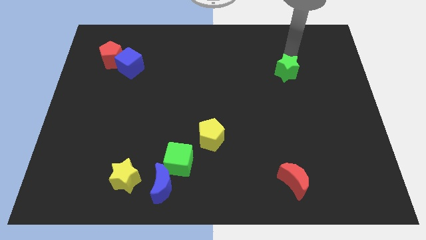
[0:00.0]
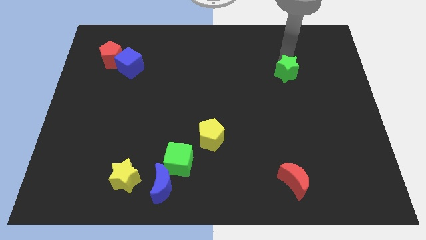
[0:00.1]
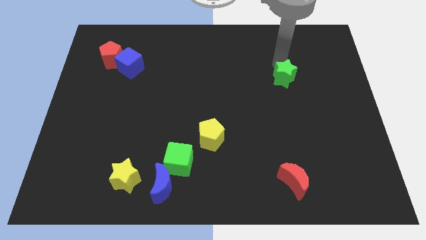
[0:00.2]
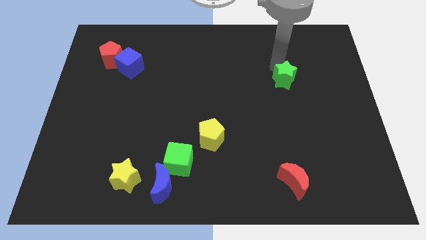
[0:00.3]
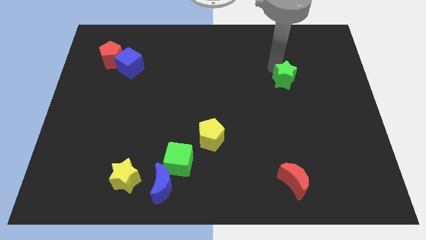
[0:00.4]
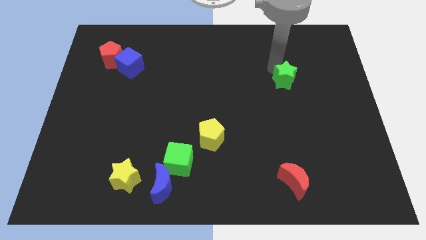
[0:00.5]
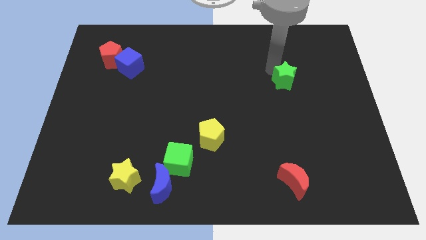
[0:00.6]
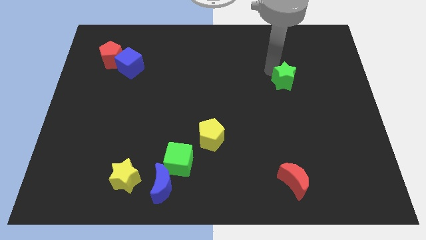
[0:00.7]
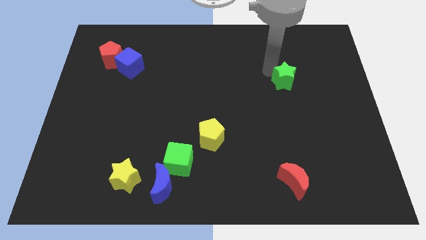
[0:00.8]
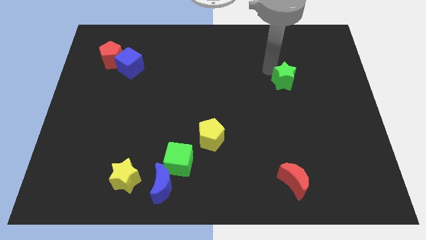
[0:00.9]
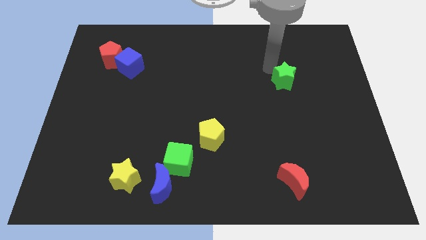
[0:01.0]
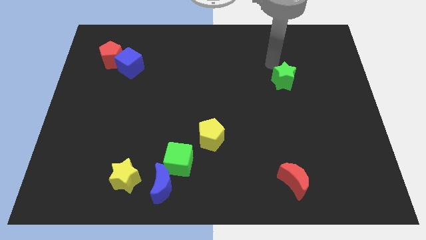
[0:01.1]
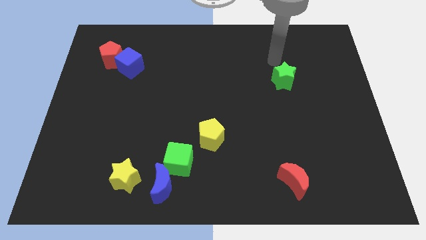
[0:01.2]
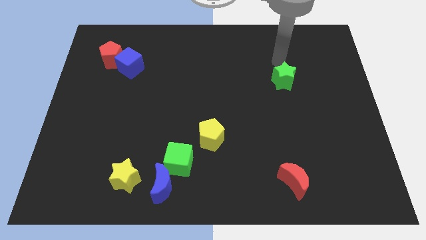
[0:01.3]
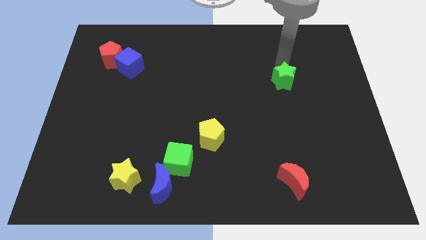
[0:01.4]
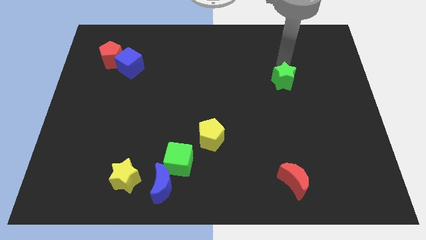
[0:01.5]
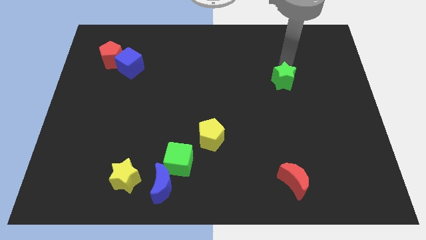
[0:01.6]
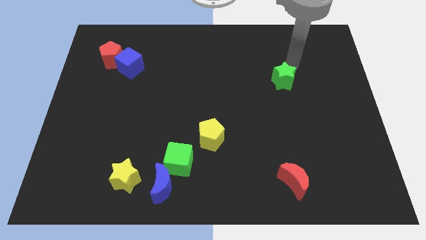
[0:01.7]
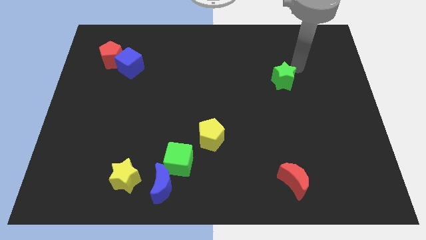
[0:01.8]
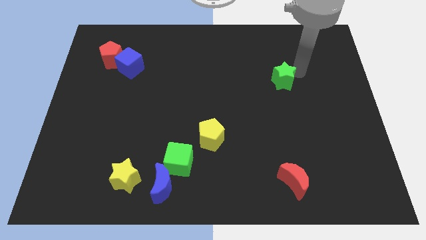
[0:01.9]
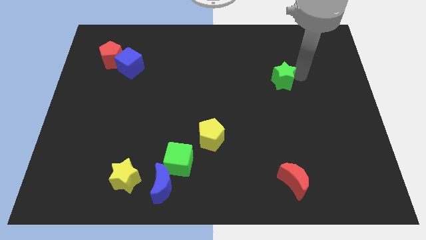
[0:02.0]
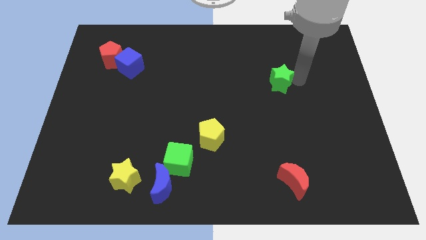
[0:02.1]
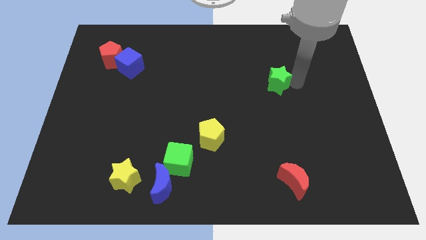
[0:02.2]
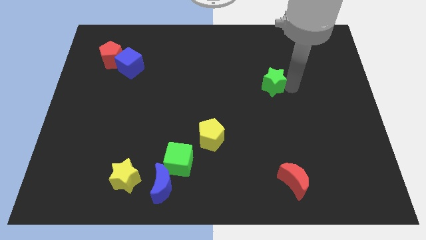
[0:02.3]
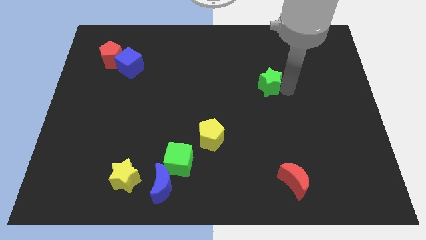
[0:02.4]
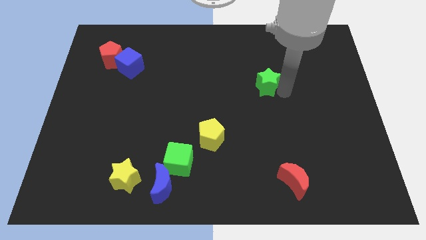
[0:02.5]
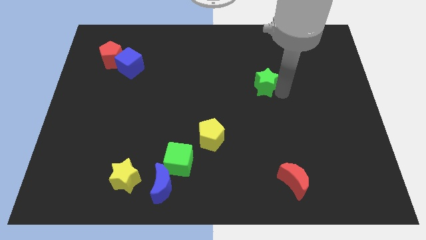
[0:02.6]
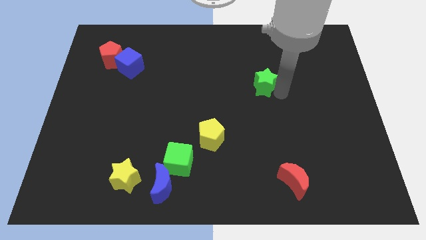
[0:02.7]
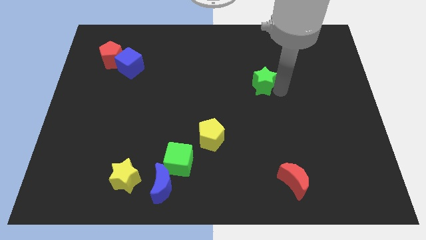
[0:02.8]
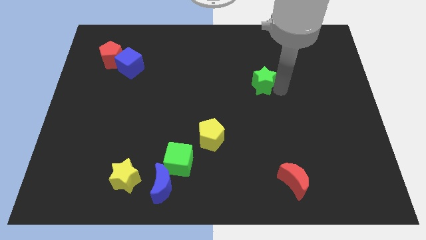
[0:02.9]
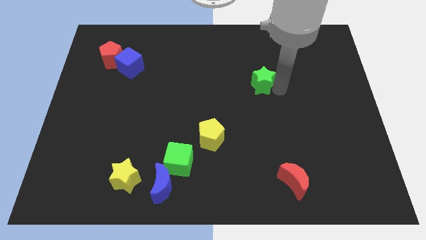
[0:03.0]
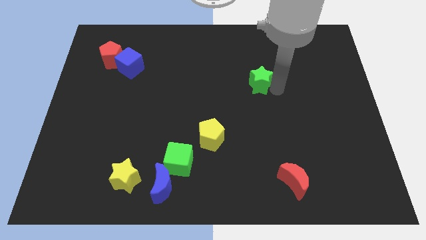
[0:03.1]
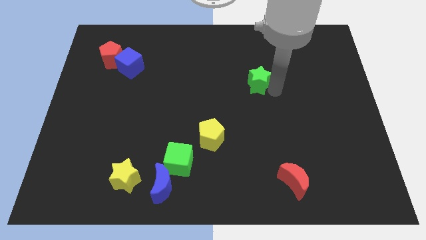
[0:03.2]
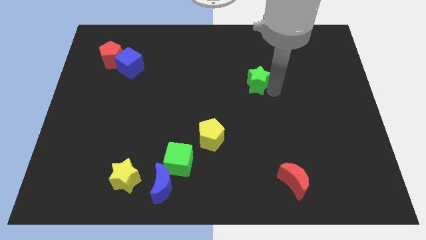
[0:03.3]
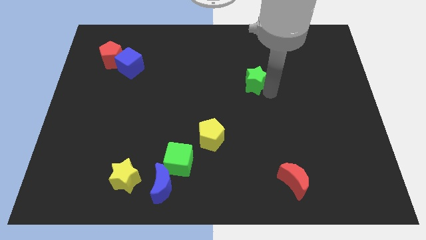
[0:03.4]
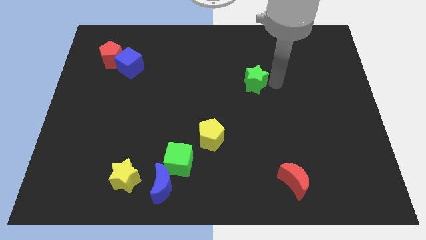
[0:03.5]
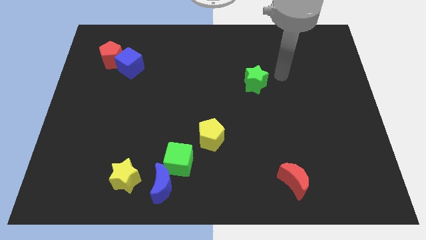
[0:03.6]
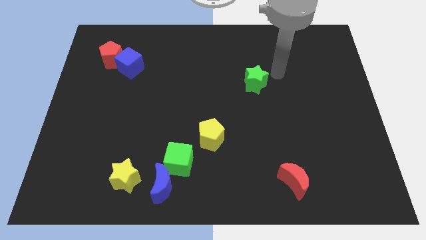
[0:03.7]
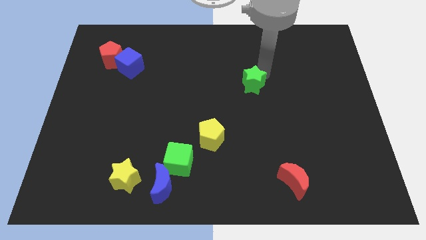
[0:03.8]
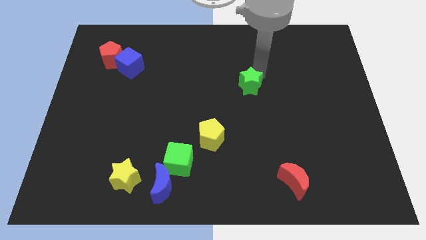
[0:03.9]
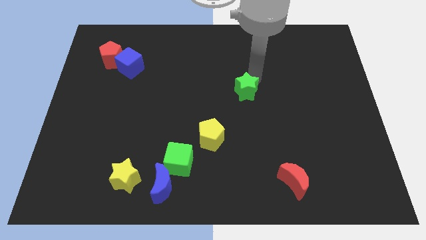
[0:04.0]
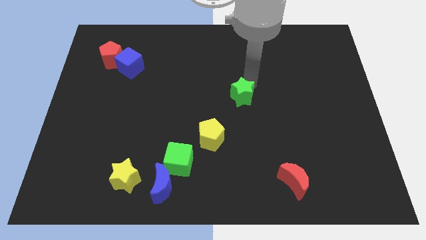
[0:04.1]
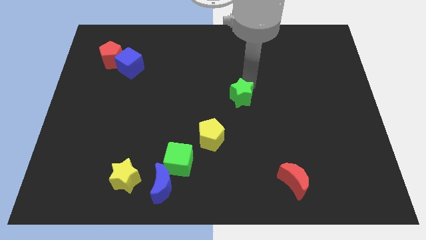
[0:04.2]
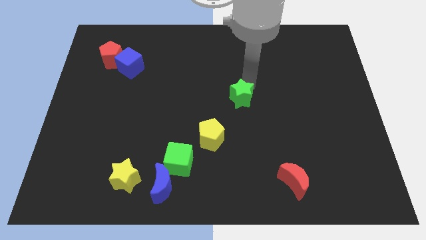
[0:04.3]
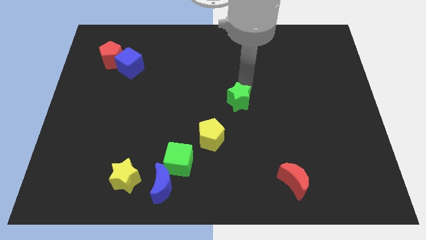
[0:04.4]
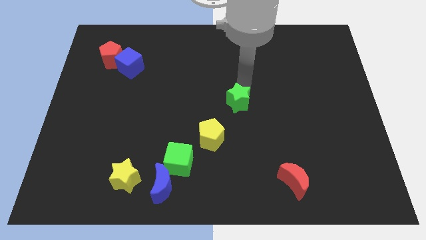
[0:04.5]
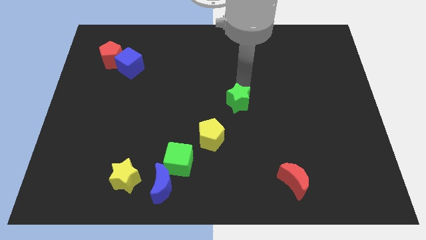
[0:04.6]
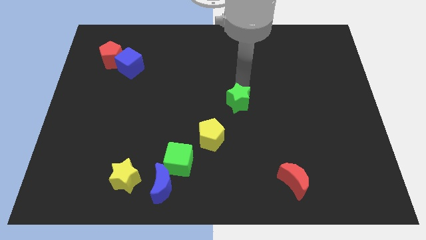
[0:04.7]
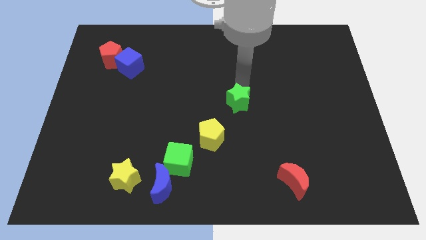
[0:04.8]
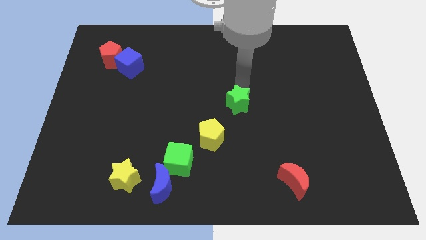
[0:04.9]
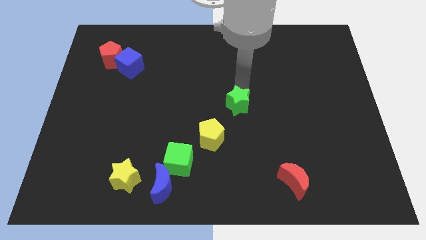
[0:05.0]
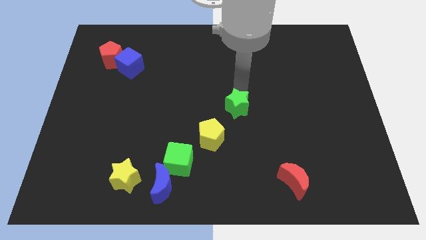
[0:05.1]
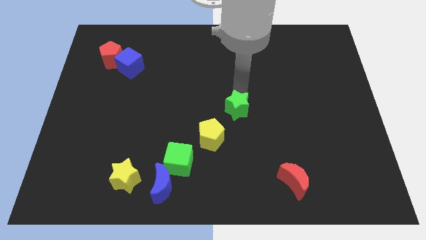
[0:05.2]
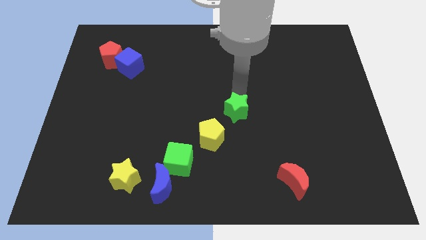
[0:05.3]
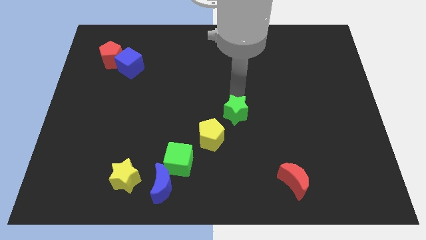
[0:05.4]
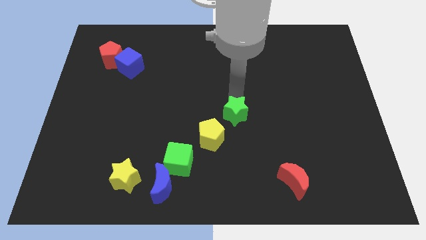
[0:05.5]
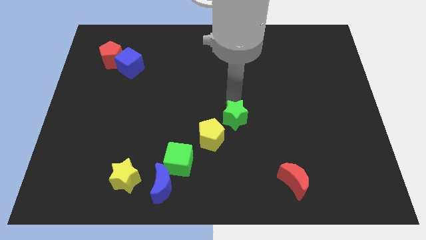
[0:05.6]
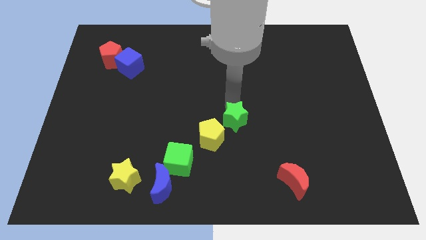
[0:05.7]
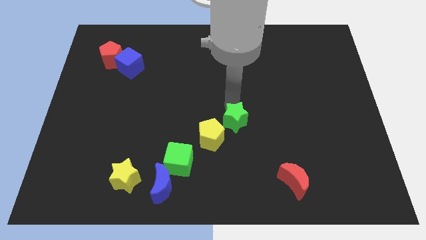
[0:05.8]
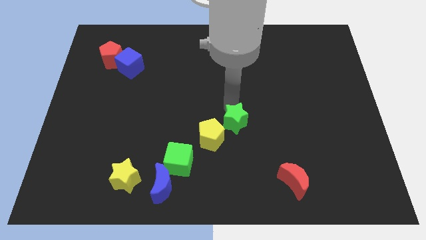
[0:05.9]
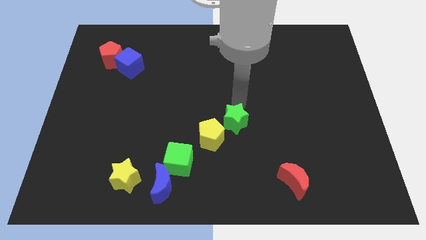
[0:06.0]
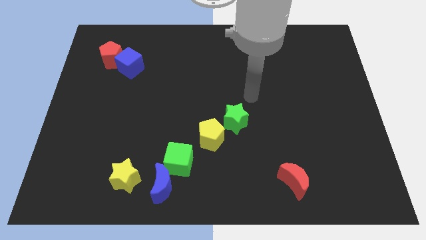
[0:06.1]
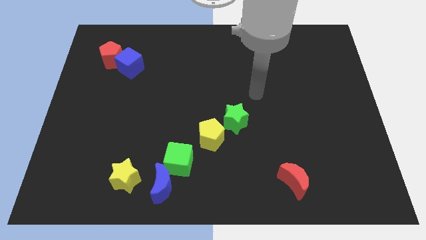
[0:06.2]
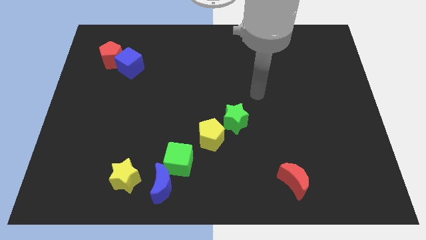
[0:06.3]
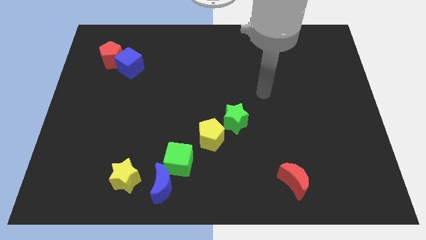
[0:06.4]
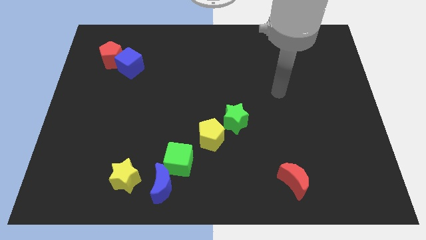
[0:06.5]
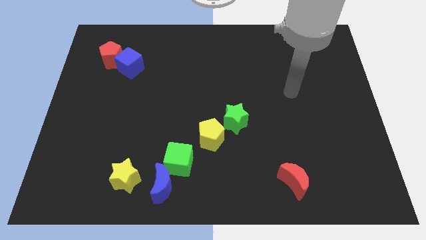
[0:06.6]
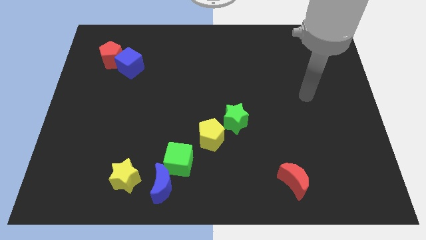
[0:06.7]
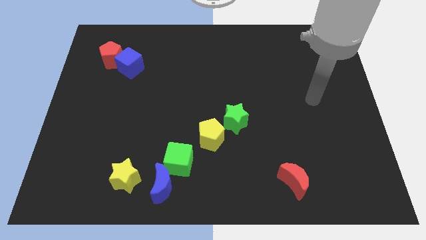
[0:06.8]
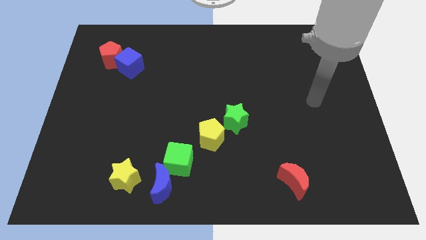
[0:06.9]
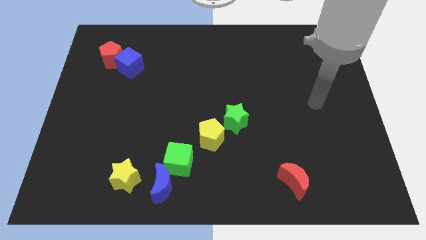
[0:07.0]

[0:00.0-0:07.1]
push the green star close to the yellow pentagon

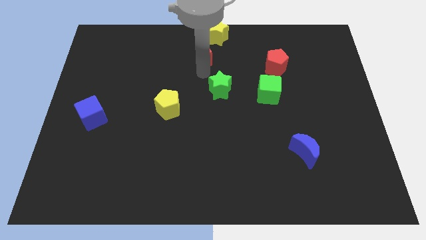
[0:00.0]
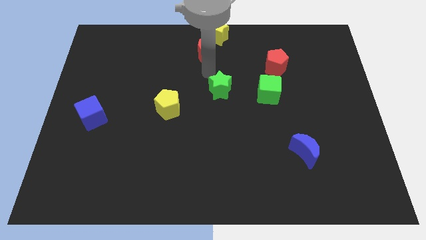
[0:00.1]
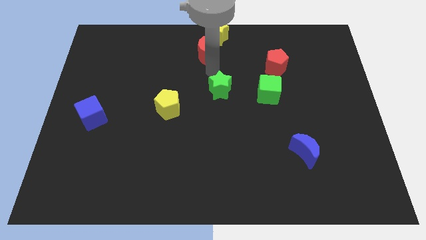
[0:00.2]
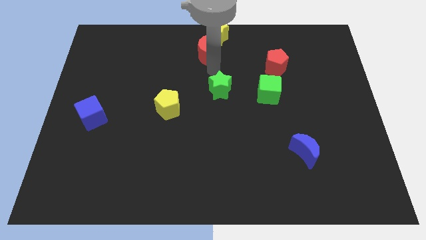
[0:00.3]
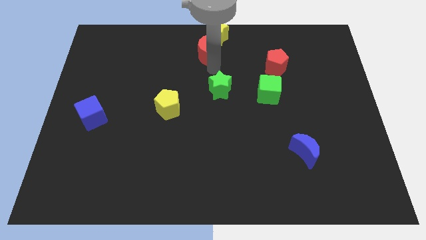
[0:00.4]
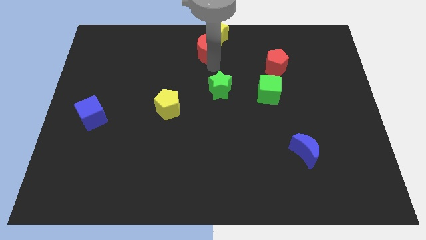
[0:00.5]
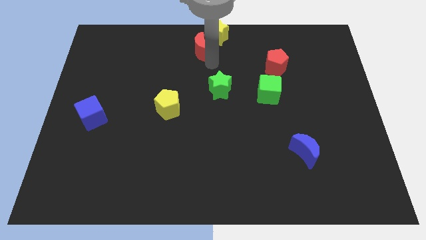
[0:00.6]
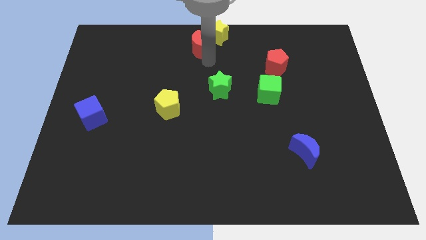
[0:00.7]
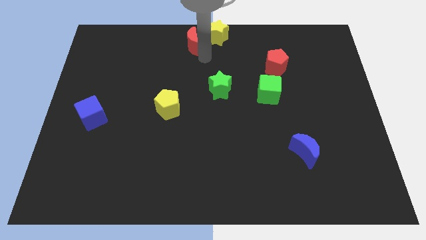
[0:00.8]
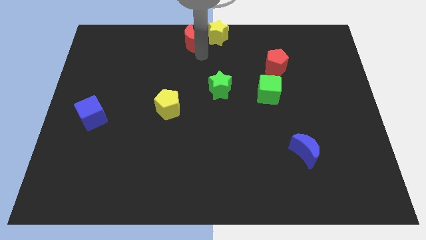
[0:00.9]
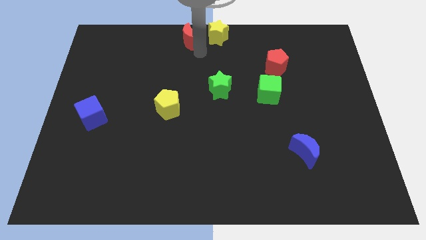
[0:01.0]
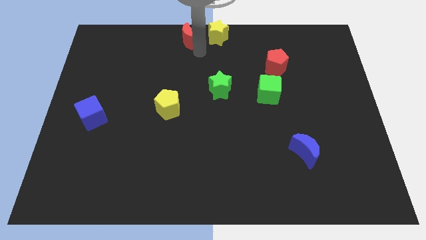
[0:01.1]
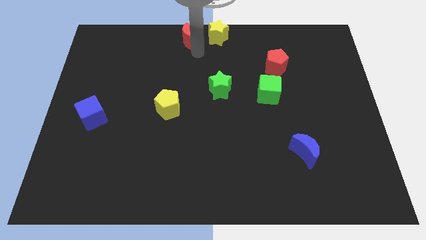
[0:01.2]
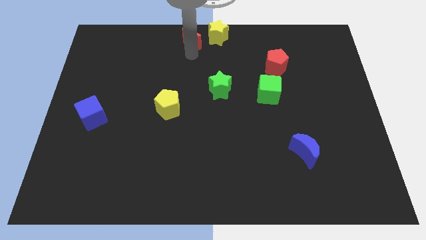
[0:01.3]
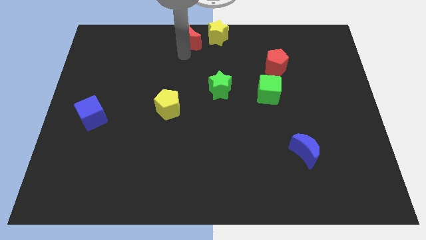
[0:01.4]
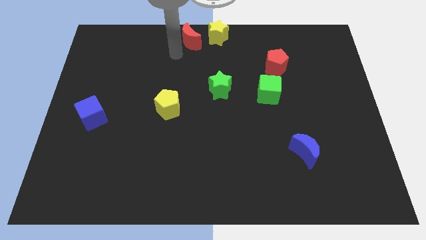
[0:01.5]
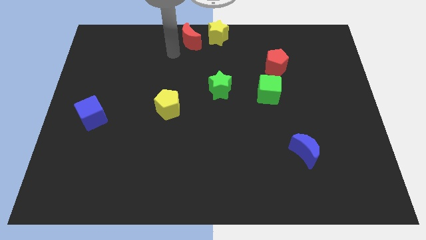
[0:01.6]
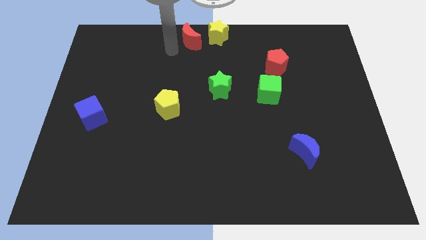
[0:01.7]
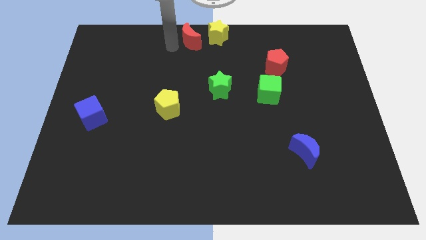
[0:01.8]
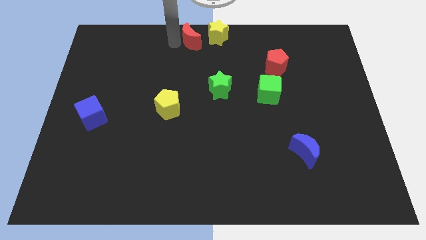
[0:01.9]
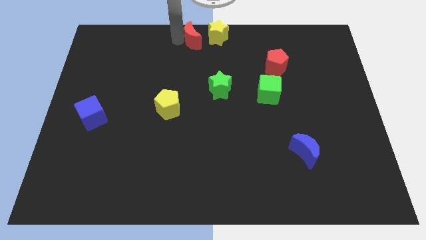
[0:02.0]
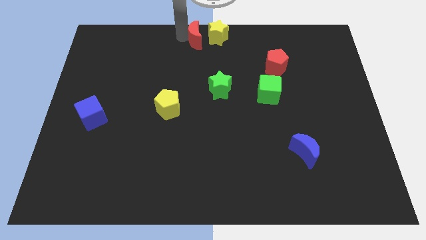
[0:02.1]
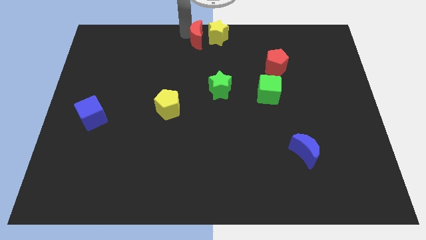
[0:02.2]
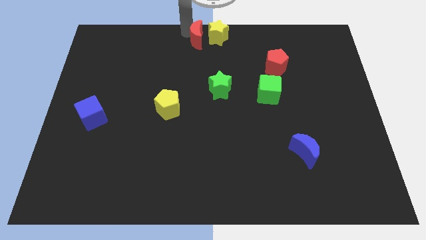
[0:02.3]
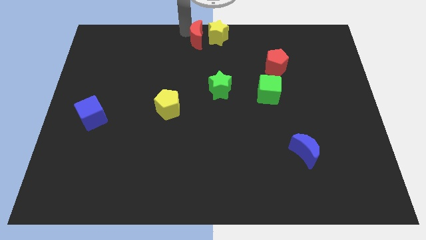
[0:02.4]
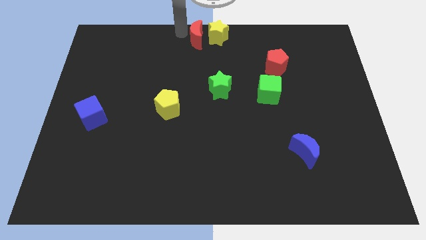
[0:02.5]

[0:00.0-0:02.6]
move the red crescent to the left of the yellow star
